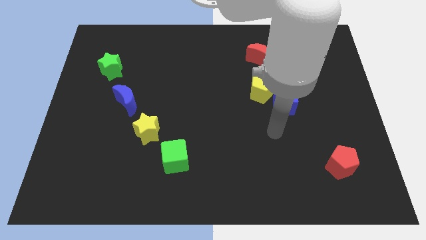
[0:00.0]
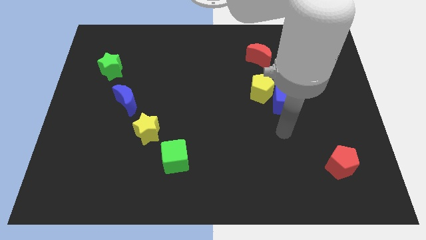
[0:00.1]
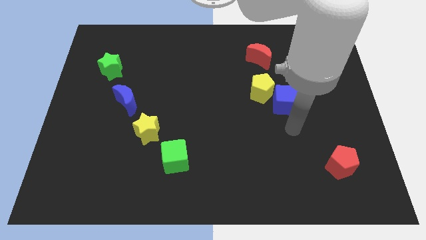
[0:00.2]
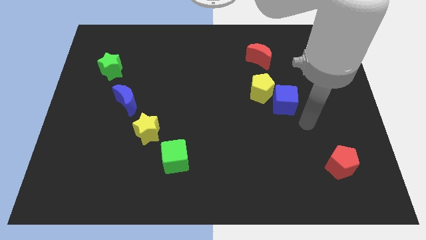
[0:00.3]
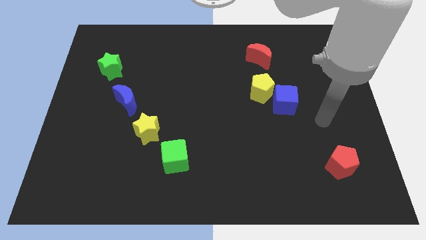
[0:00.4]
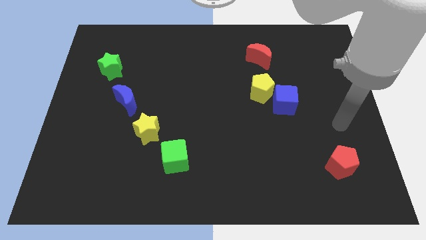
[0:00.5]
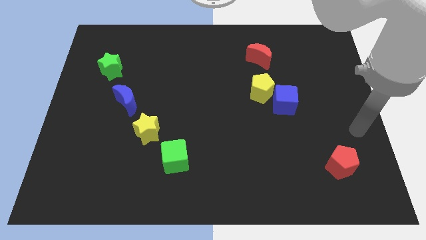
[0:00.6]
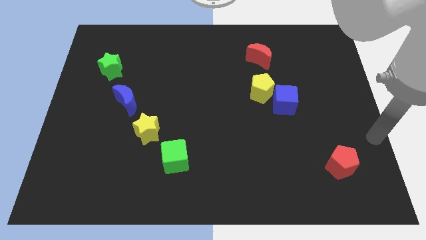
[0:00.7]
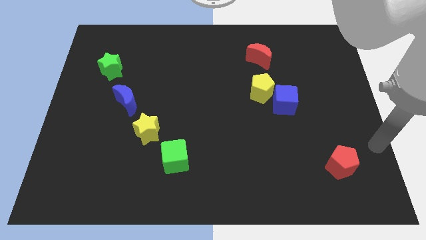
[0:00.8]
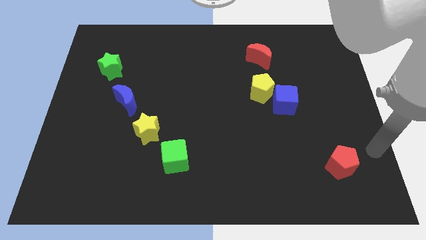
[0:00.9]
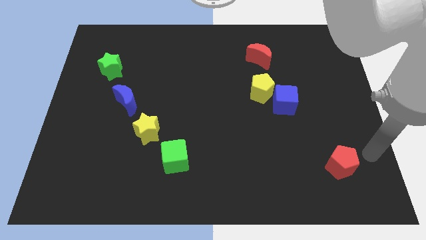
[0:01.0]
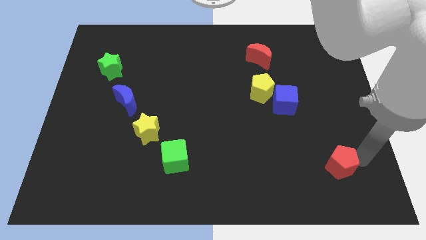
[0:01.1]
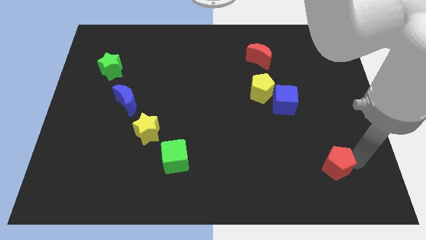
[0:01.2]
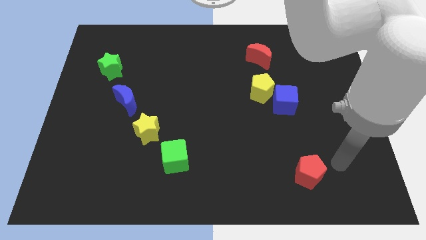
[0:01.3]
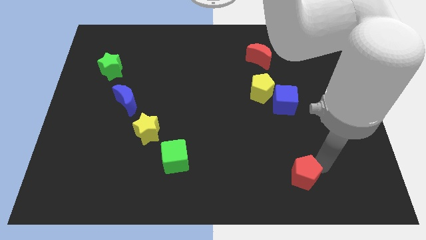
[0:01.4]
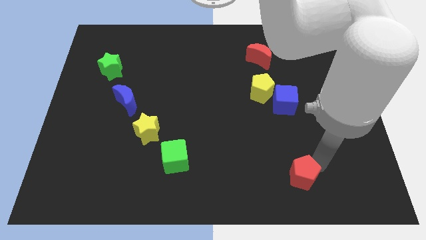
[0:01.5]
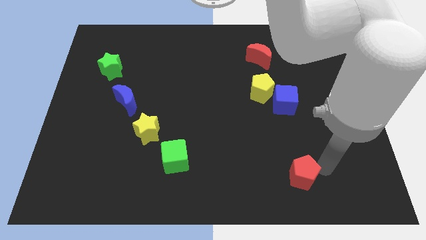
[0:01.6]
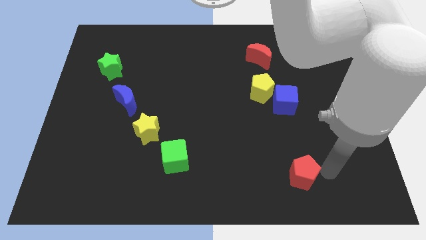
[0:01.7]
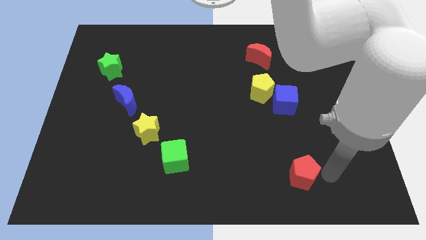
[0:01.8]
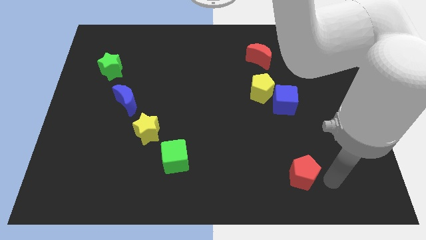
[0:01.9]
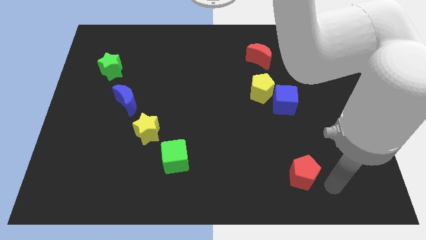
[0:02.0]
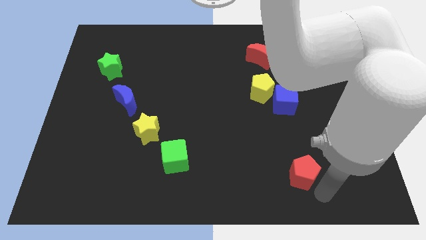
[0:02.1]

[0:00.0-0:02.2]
slightly drag the red pentagon towards the left

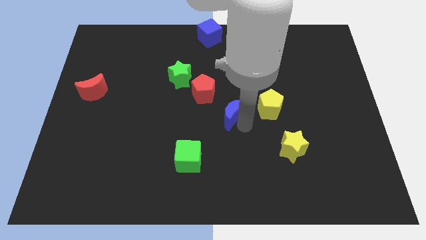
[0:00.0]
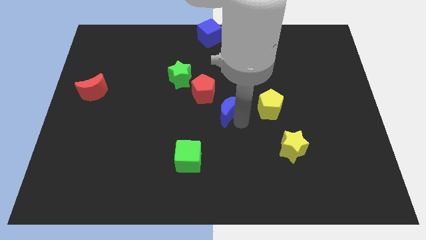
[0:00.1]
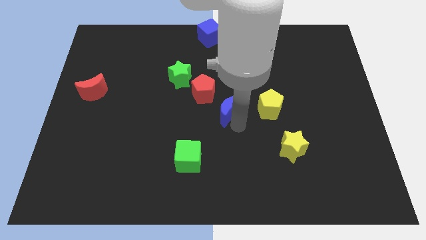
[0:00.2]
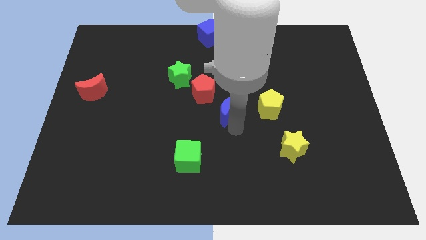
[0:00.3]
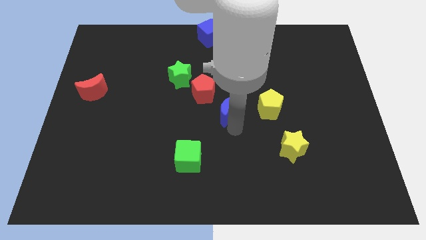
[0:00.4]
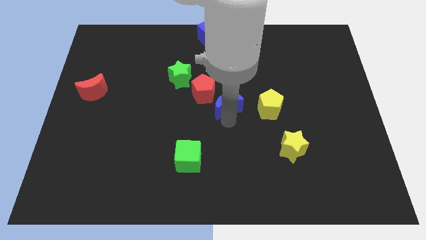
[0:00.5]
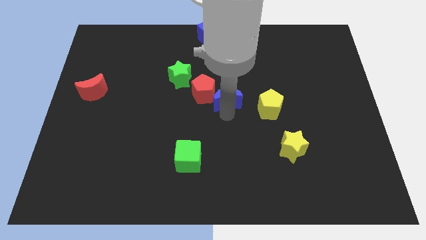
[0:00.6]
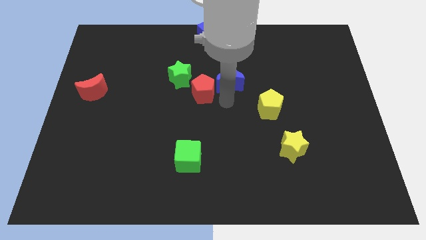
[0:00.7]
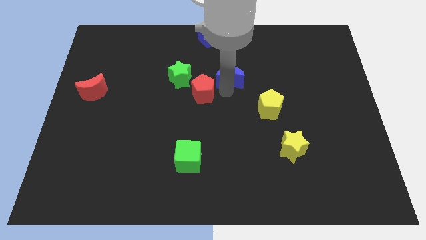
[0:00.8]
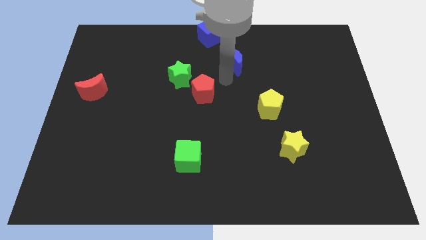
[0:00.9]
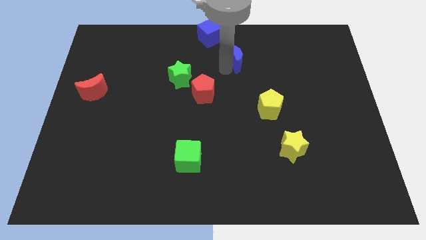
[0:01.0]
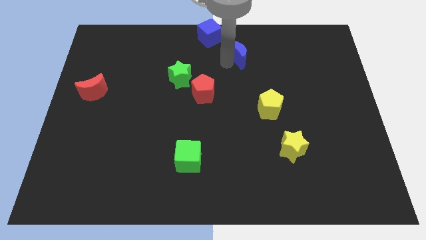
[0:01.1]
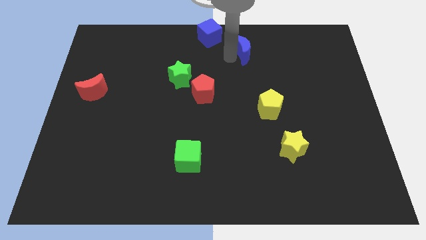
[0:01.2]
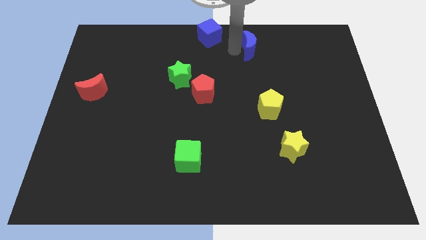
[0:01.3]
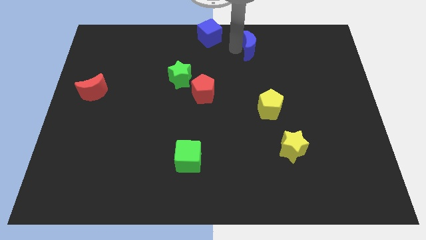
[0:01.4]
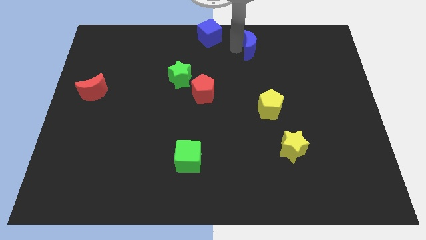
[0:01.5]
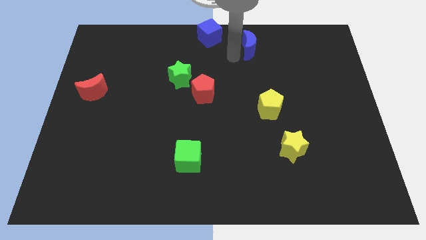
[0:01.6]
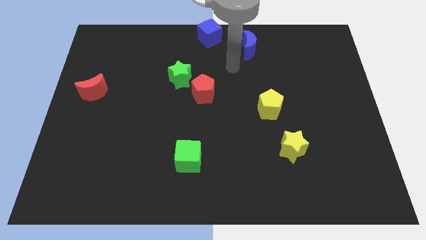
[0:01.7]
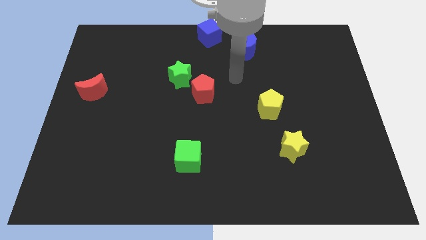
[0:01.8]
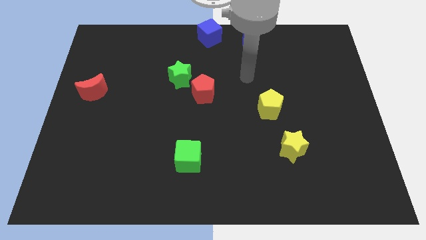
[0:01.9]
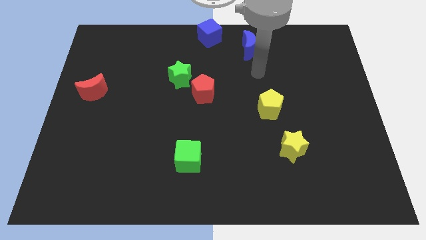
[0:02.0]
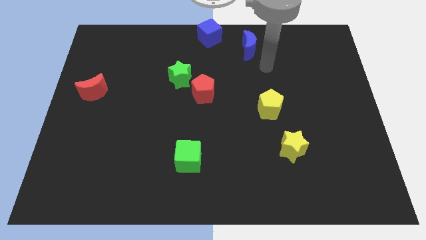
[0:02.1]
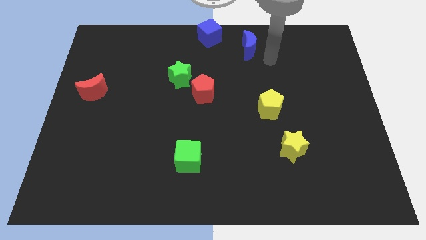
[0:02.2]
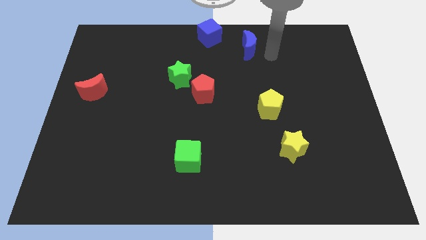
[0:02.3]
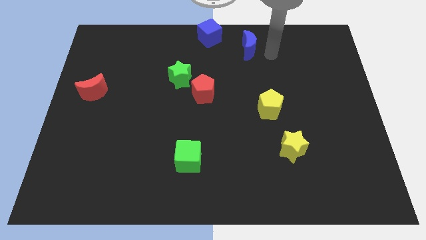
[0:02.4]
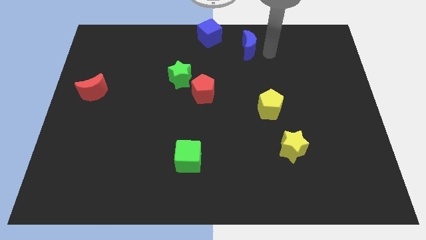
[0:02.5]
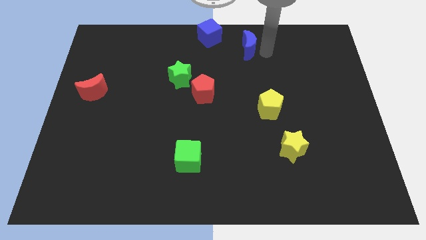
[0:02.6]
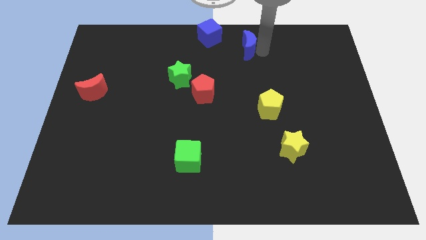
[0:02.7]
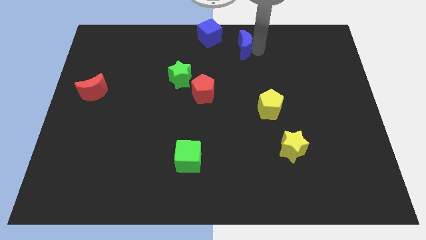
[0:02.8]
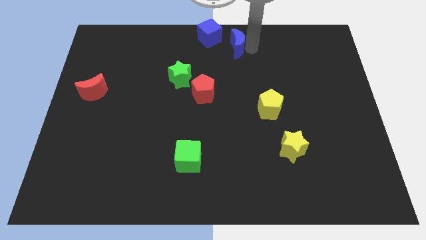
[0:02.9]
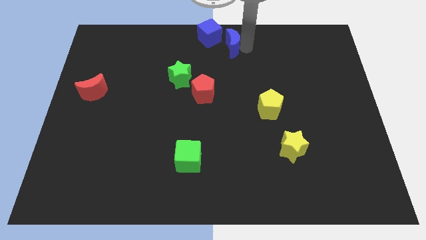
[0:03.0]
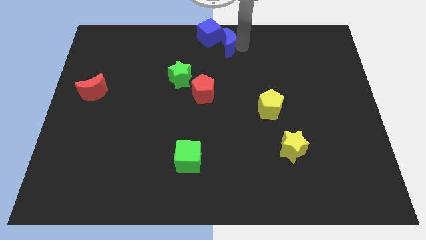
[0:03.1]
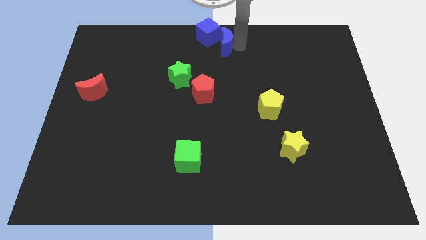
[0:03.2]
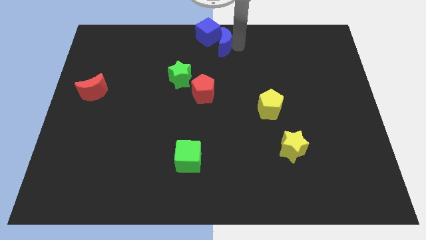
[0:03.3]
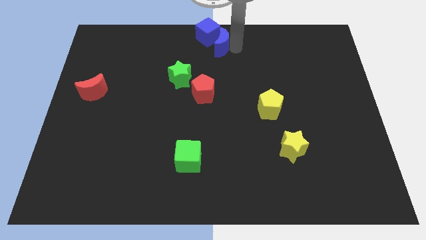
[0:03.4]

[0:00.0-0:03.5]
push the blue crescent to the right of the blue cube

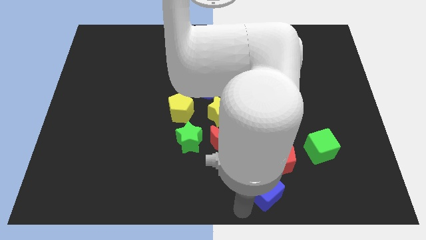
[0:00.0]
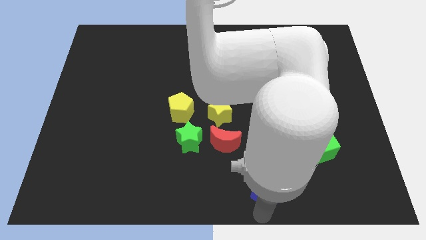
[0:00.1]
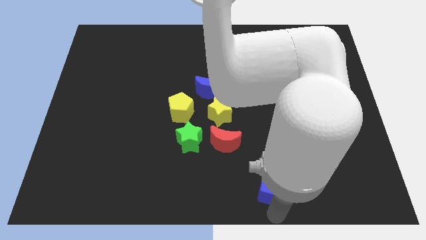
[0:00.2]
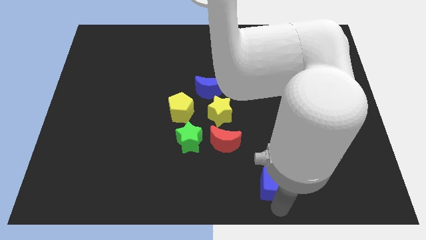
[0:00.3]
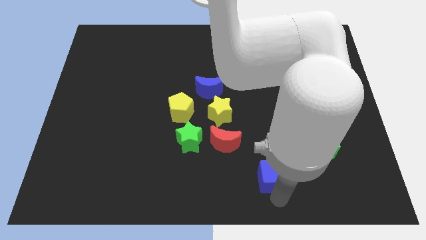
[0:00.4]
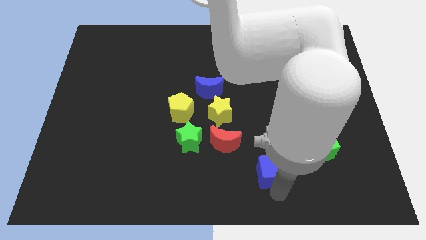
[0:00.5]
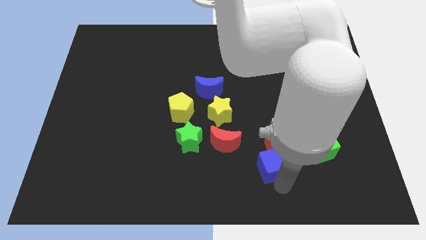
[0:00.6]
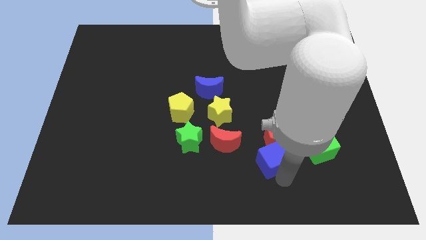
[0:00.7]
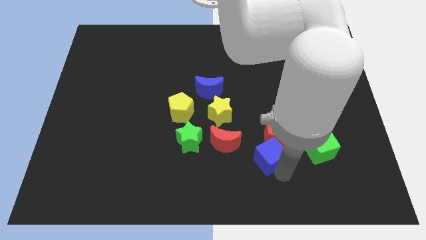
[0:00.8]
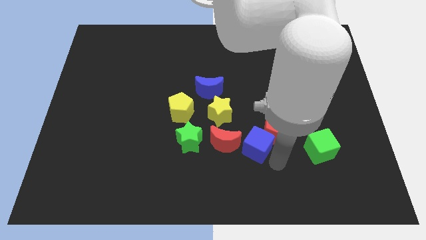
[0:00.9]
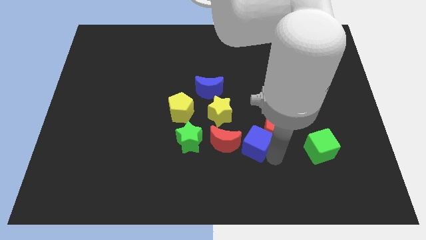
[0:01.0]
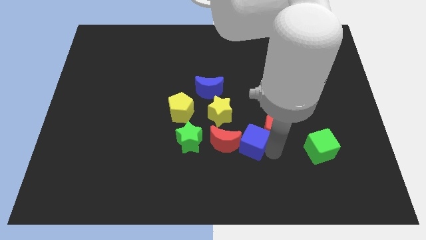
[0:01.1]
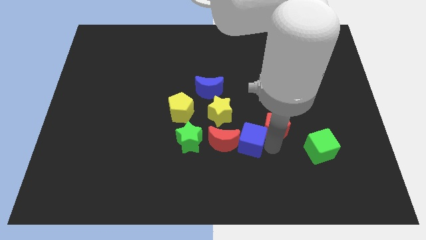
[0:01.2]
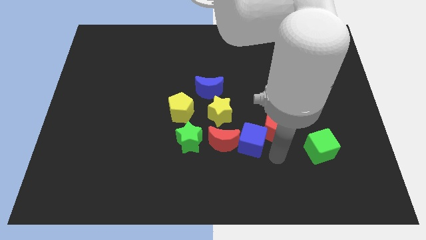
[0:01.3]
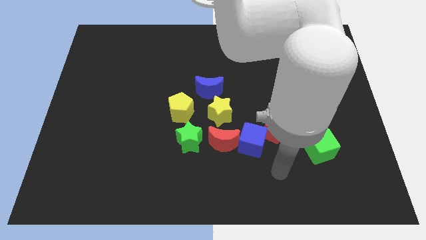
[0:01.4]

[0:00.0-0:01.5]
place blue moon to the right of red moon

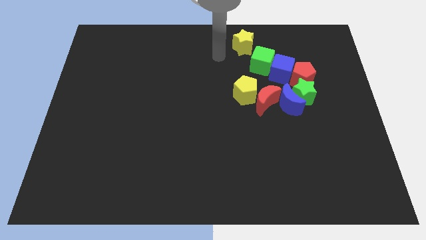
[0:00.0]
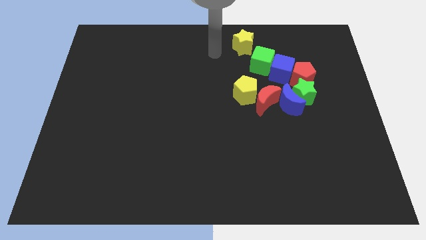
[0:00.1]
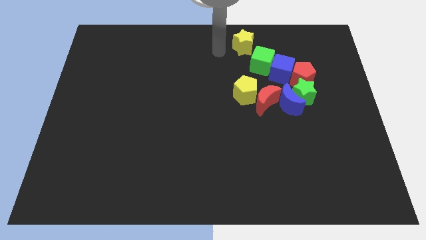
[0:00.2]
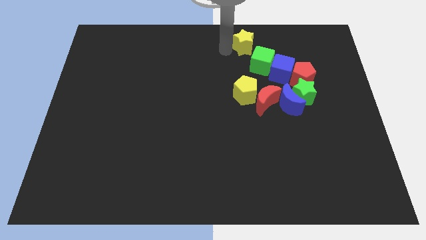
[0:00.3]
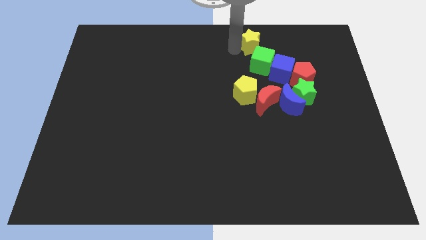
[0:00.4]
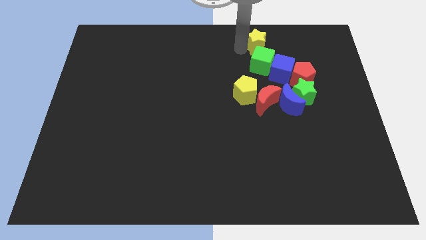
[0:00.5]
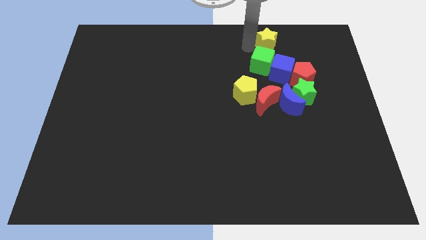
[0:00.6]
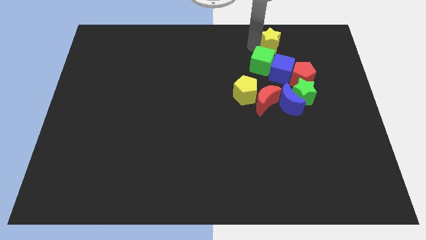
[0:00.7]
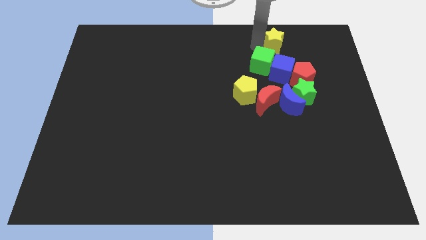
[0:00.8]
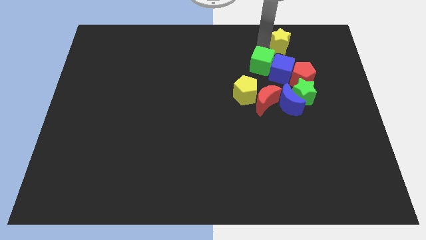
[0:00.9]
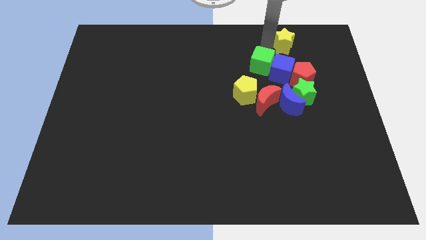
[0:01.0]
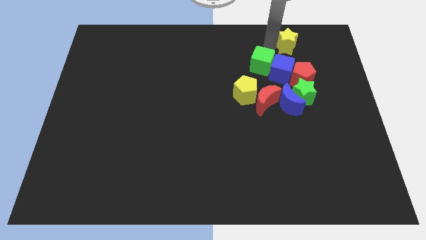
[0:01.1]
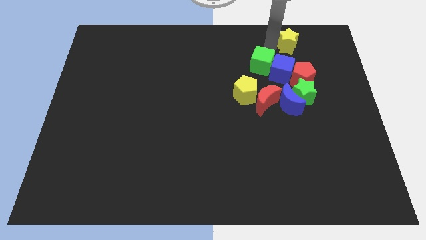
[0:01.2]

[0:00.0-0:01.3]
place the yellow star above the blue cube

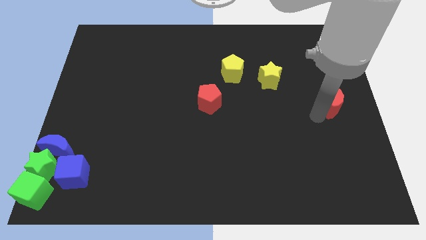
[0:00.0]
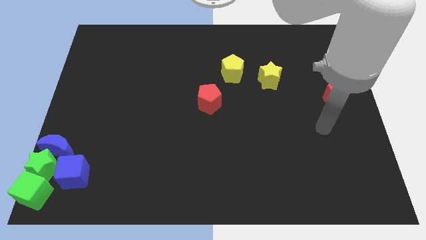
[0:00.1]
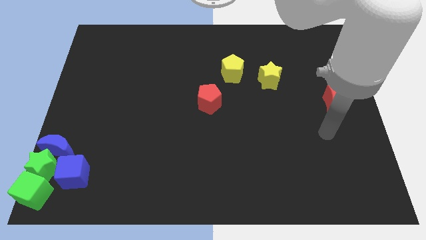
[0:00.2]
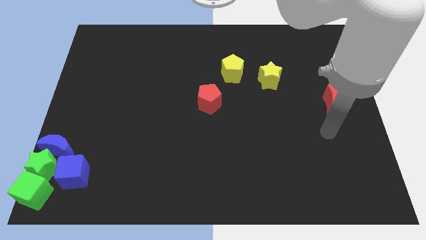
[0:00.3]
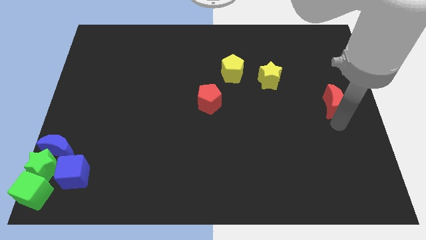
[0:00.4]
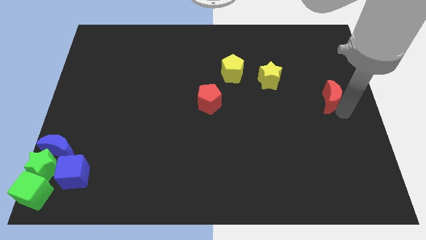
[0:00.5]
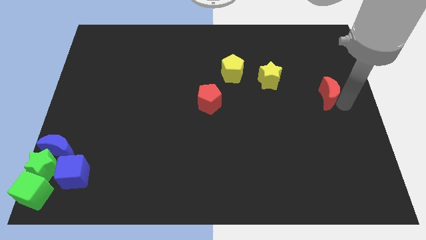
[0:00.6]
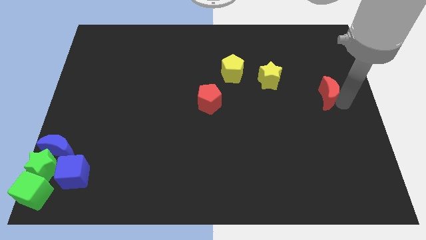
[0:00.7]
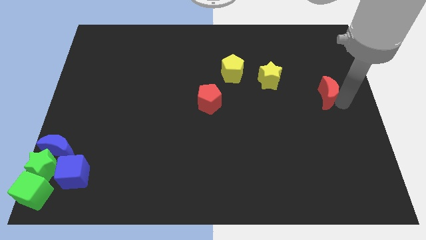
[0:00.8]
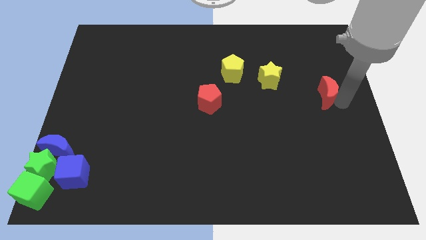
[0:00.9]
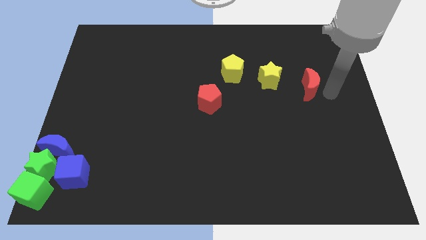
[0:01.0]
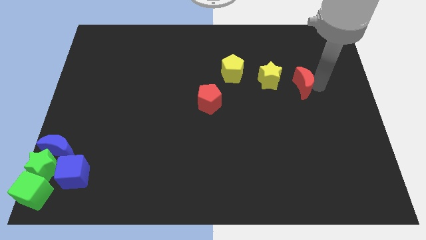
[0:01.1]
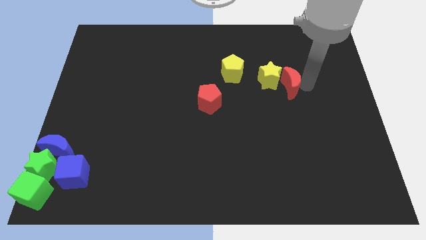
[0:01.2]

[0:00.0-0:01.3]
move the red crescent to the right of the yellow star
